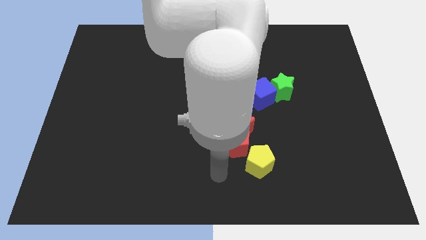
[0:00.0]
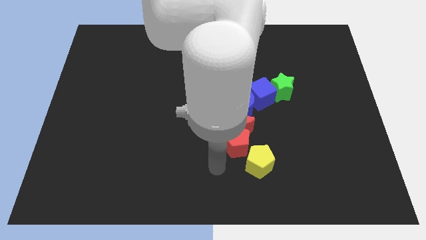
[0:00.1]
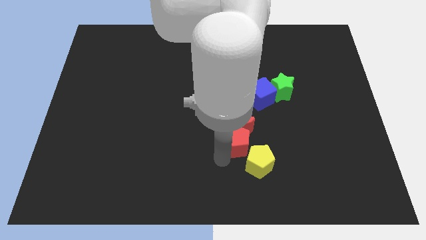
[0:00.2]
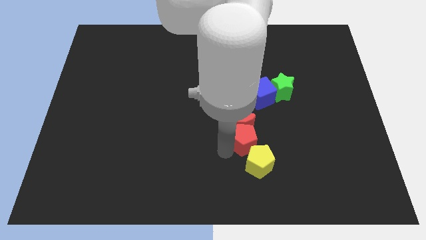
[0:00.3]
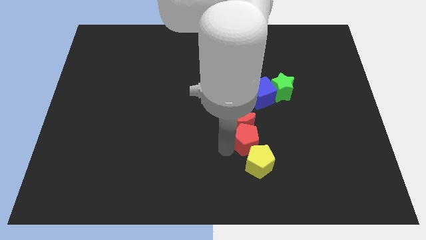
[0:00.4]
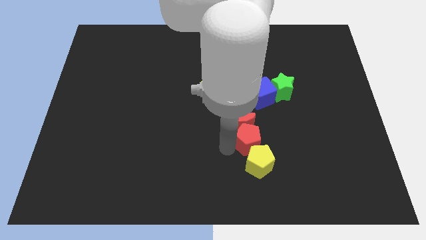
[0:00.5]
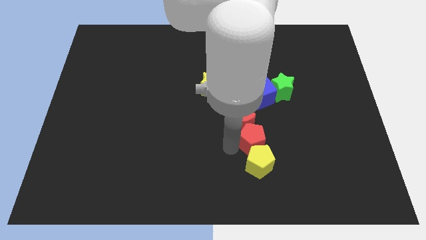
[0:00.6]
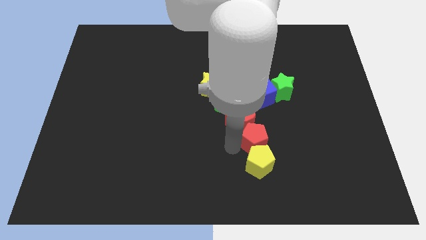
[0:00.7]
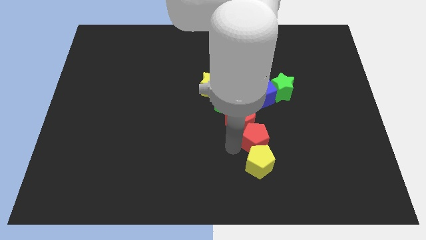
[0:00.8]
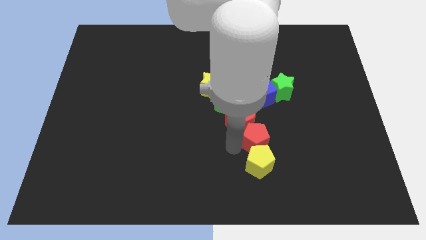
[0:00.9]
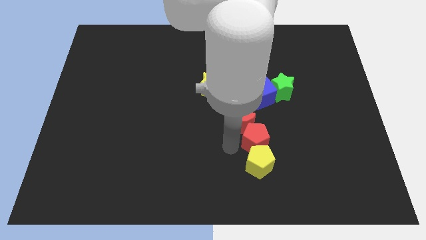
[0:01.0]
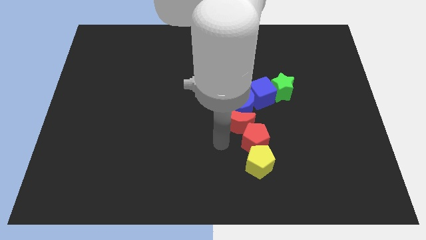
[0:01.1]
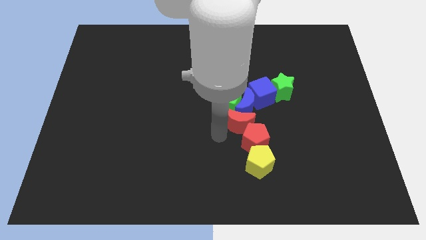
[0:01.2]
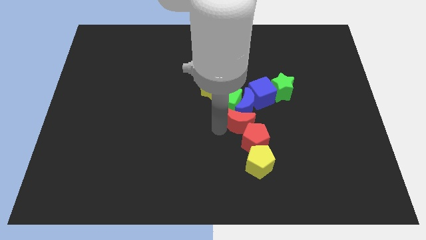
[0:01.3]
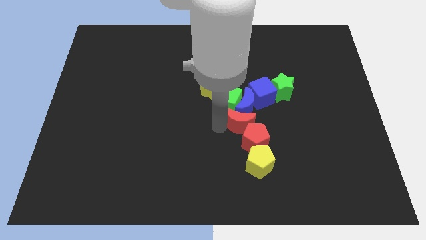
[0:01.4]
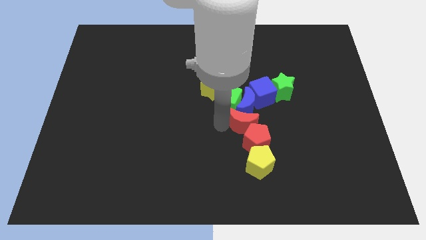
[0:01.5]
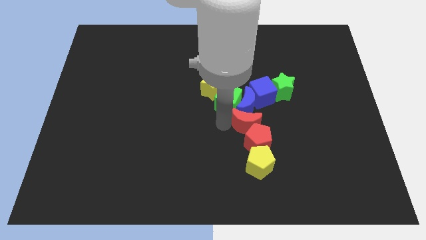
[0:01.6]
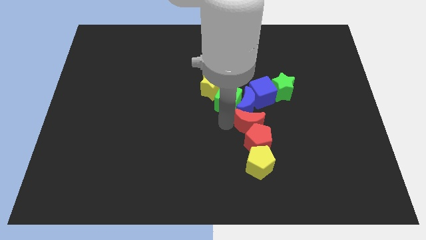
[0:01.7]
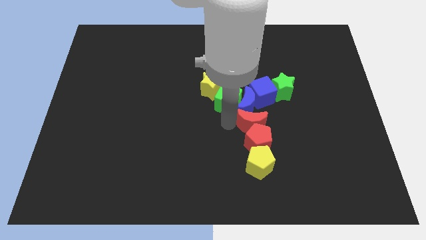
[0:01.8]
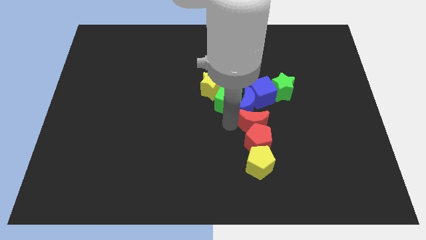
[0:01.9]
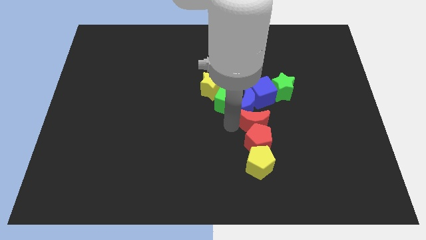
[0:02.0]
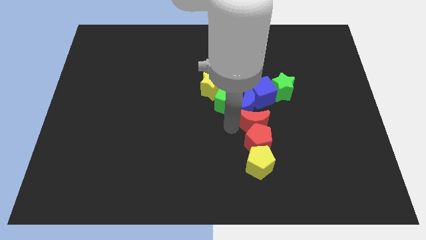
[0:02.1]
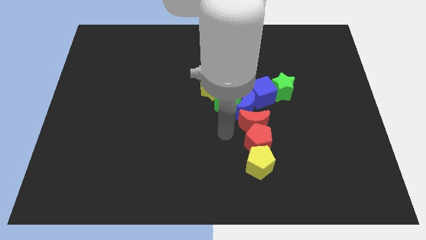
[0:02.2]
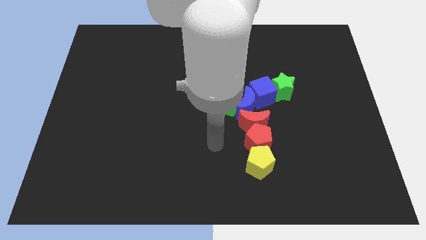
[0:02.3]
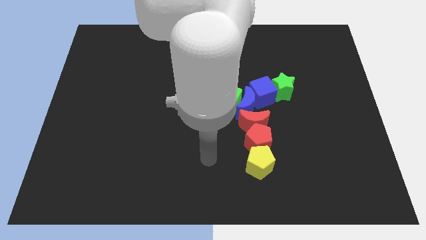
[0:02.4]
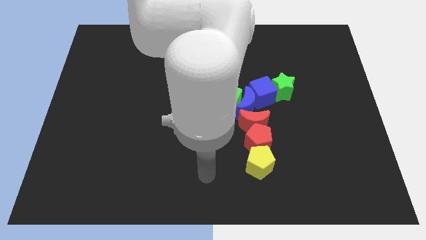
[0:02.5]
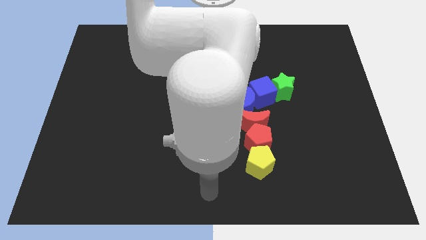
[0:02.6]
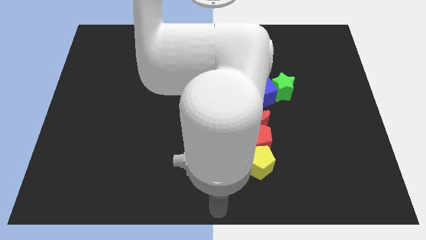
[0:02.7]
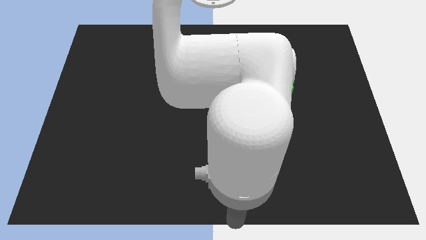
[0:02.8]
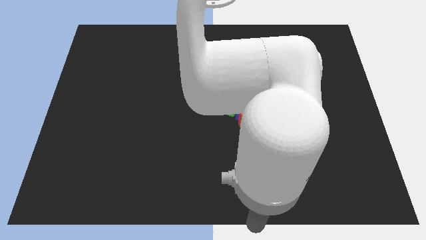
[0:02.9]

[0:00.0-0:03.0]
point your arm at the bottom center of the board

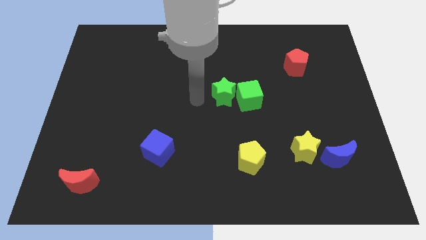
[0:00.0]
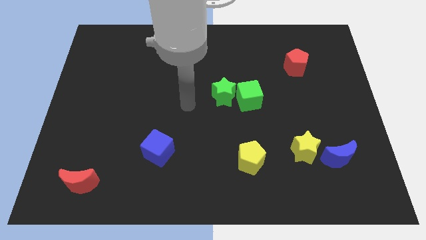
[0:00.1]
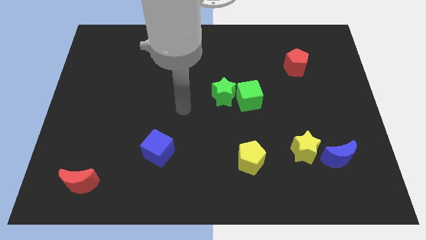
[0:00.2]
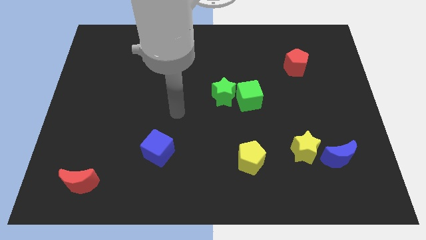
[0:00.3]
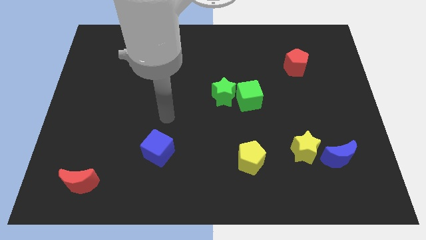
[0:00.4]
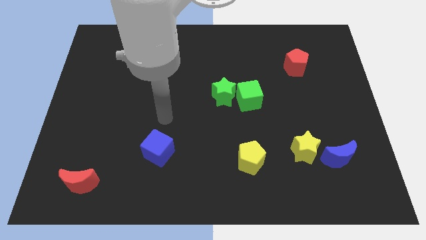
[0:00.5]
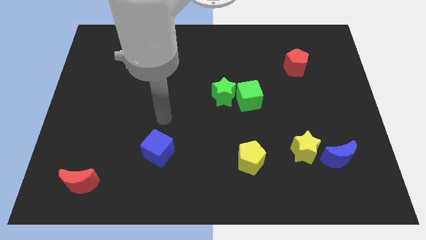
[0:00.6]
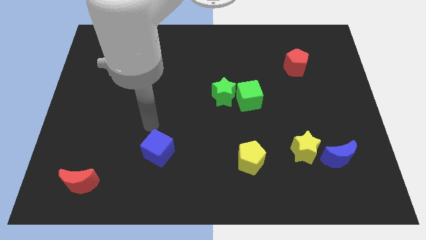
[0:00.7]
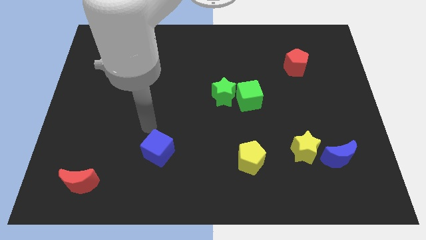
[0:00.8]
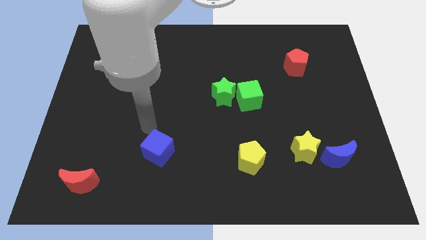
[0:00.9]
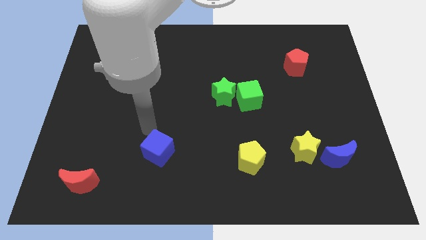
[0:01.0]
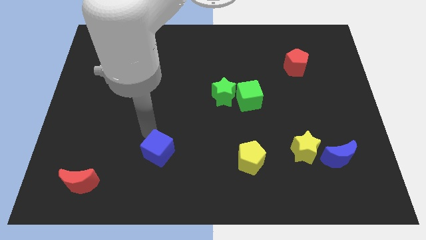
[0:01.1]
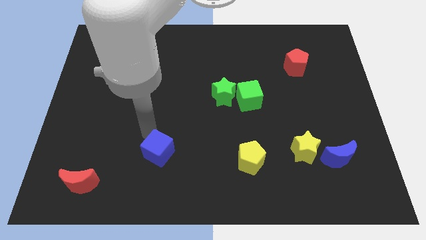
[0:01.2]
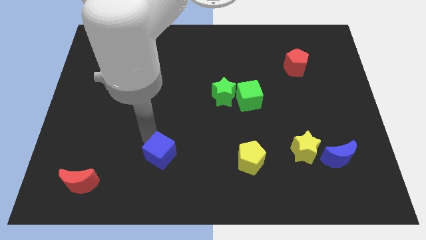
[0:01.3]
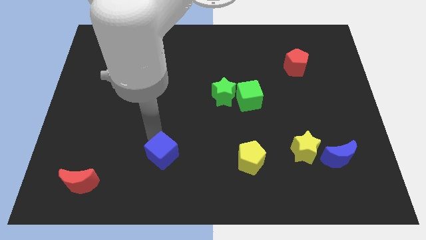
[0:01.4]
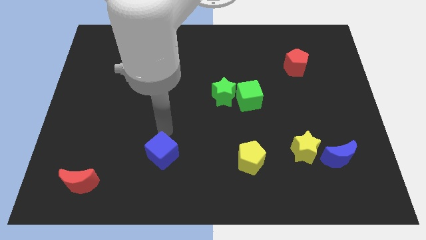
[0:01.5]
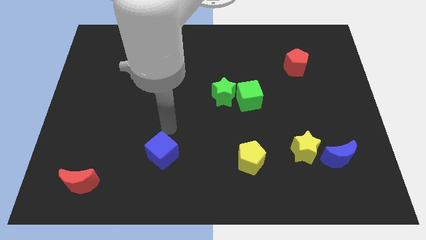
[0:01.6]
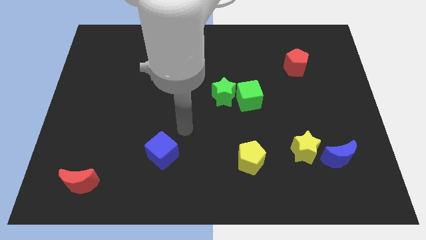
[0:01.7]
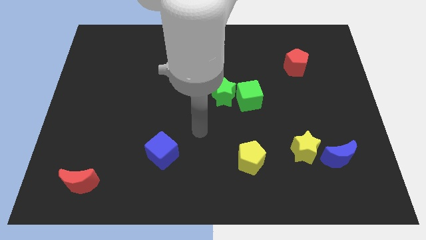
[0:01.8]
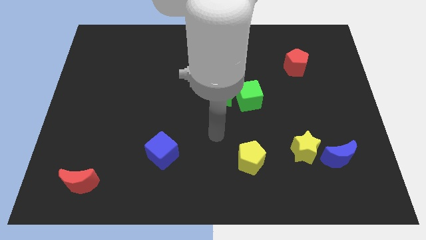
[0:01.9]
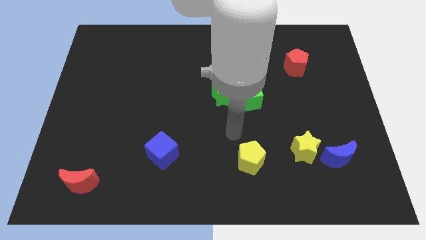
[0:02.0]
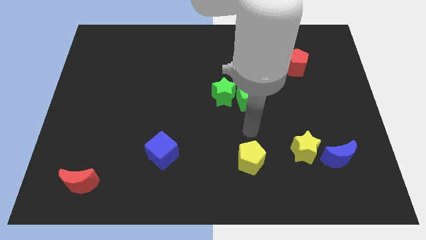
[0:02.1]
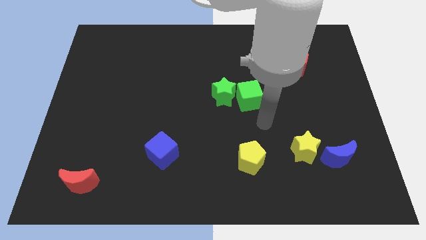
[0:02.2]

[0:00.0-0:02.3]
move the blue cube slightly to the bottom

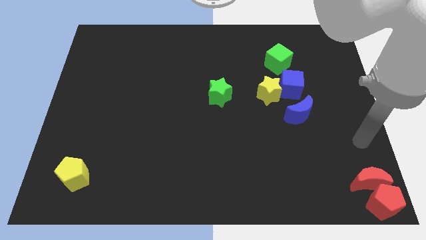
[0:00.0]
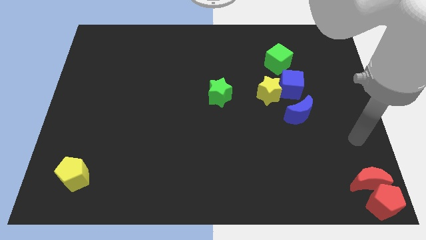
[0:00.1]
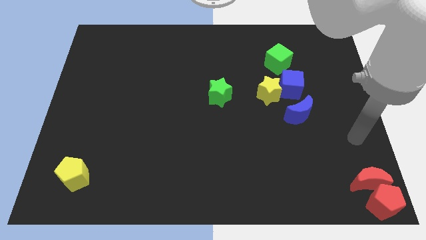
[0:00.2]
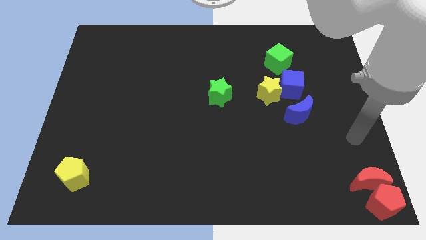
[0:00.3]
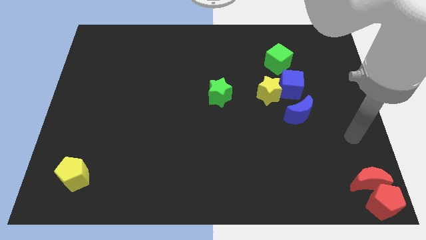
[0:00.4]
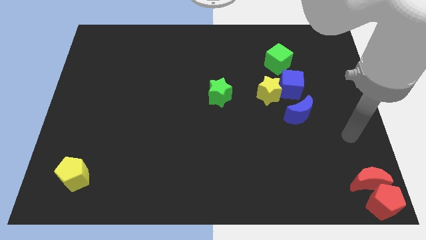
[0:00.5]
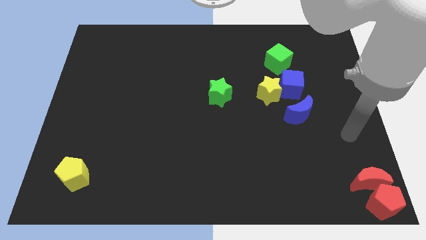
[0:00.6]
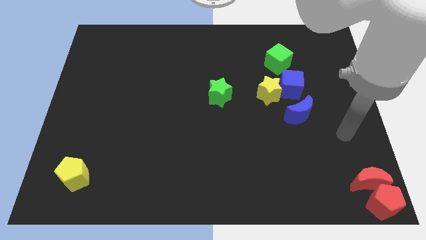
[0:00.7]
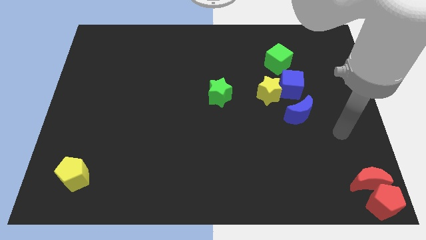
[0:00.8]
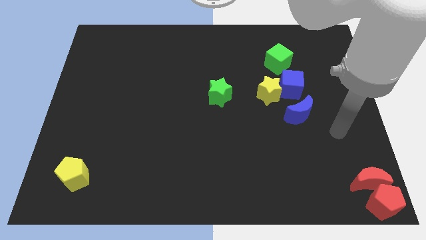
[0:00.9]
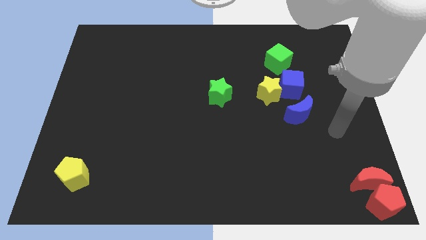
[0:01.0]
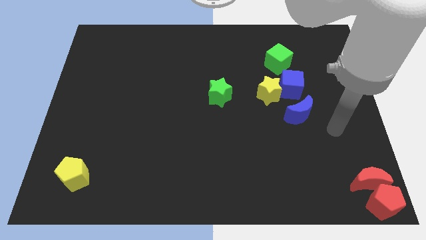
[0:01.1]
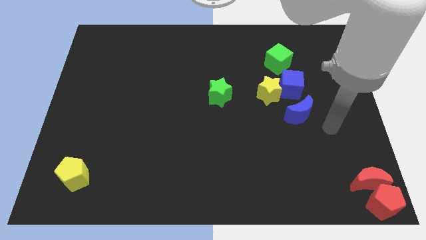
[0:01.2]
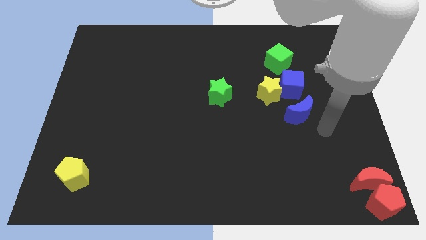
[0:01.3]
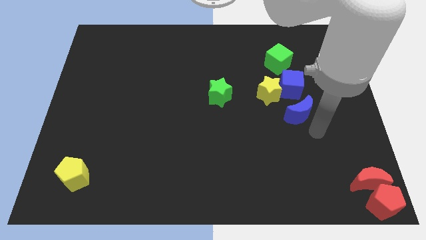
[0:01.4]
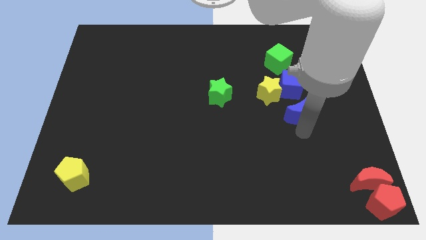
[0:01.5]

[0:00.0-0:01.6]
move your arm to the bottom of the blue crescent

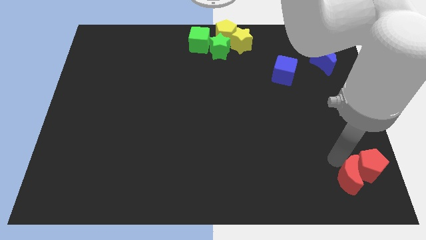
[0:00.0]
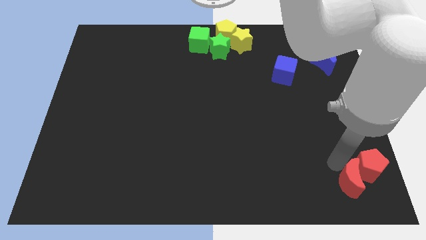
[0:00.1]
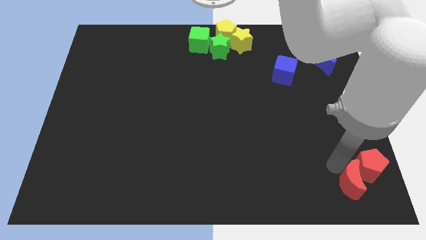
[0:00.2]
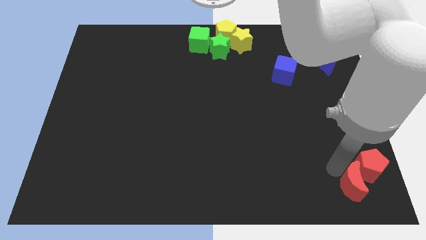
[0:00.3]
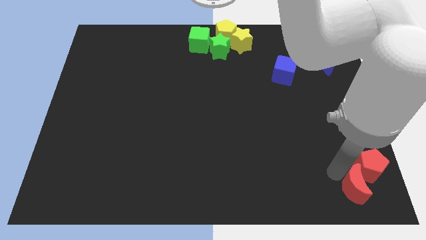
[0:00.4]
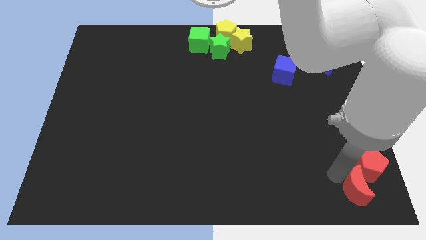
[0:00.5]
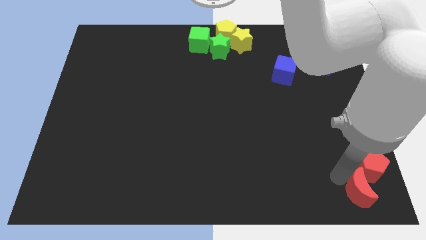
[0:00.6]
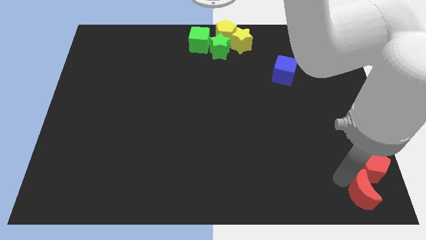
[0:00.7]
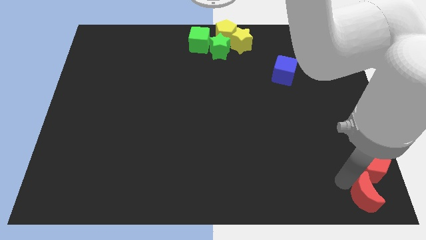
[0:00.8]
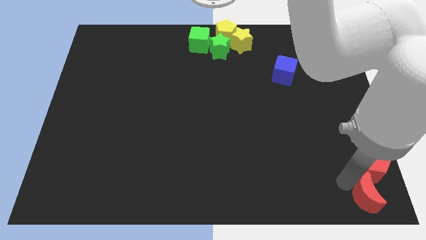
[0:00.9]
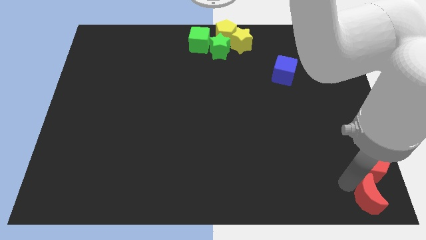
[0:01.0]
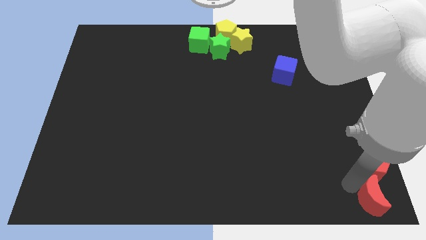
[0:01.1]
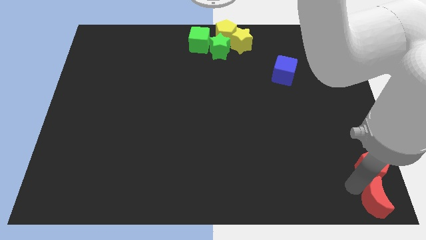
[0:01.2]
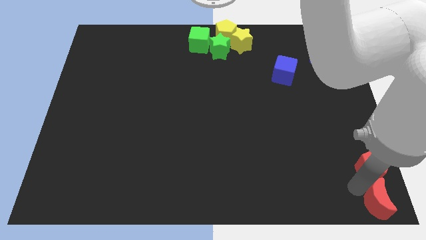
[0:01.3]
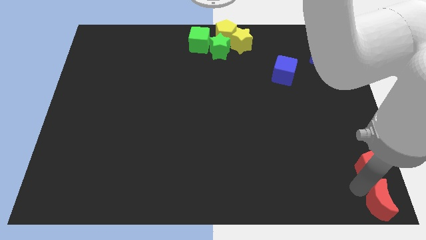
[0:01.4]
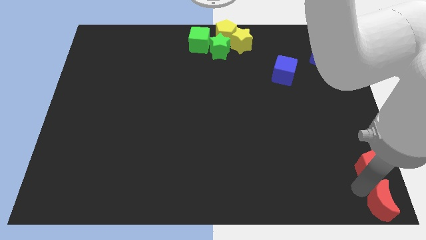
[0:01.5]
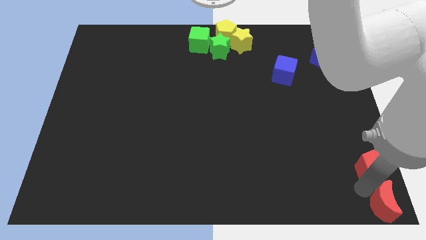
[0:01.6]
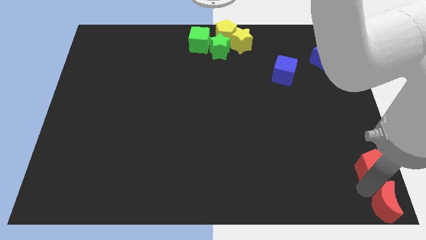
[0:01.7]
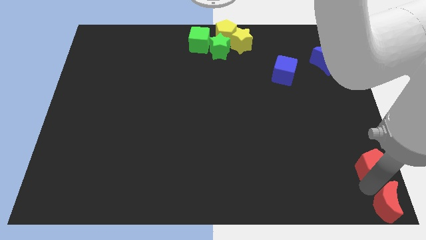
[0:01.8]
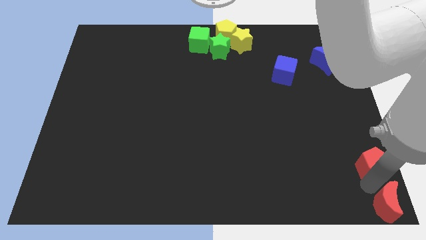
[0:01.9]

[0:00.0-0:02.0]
move red crescent to the bottom right corner
